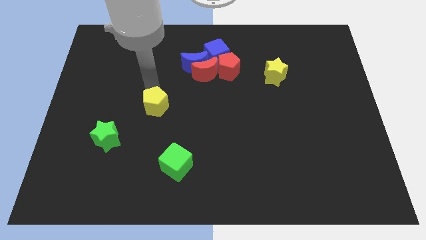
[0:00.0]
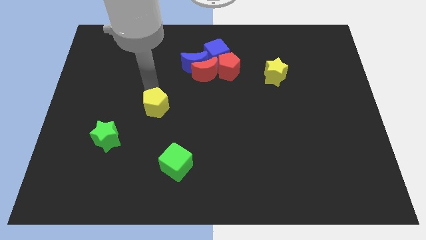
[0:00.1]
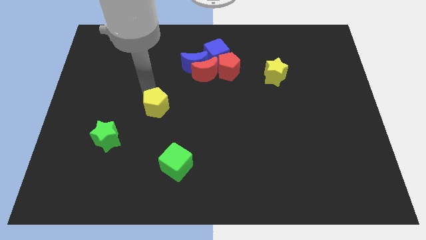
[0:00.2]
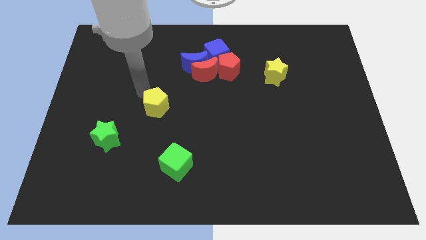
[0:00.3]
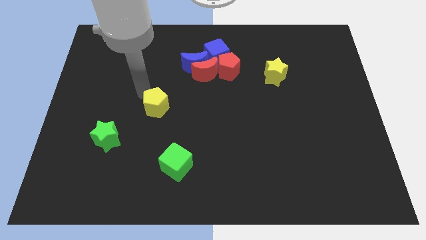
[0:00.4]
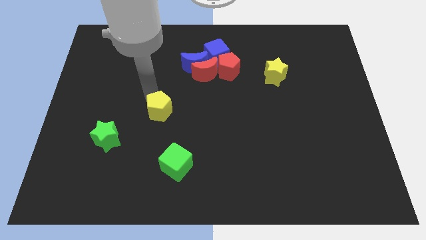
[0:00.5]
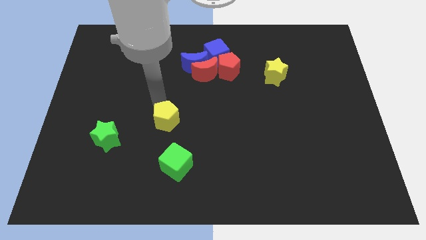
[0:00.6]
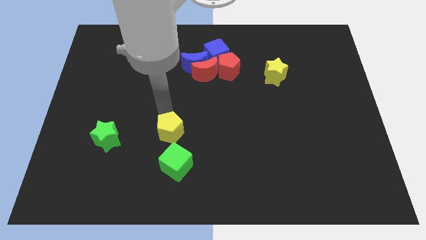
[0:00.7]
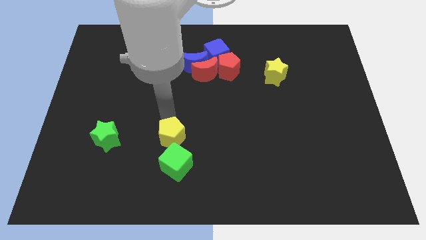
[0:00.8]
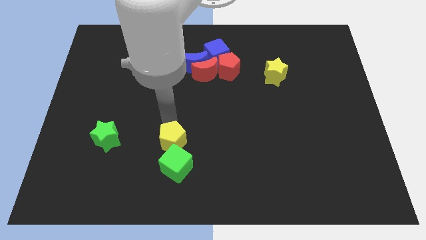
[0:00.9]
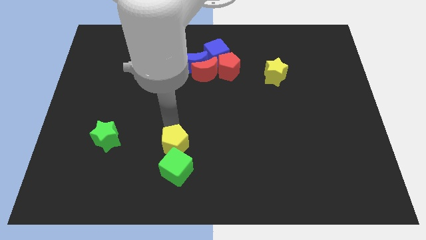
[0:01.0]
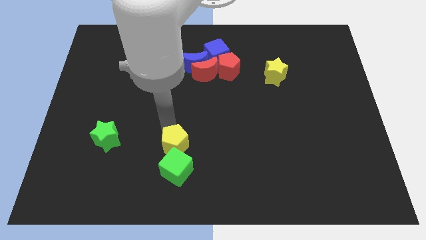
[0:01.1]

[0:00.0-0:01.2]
place the yellow pentagon right to the green star

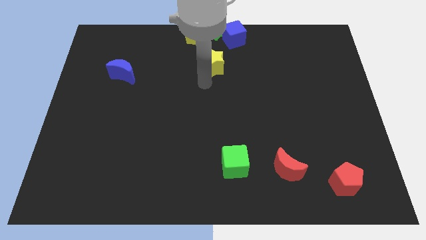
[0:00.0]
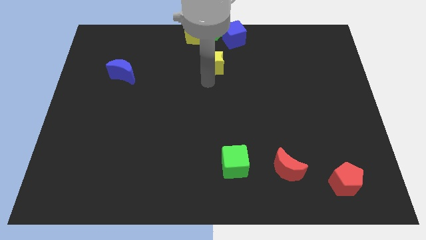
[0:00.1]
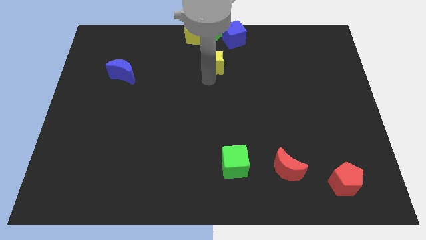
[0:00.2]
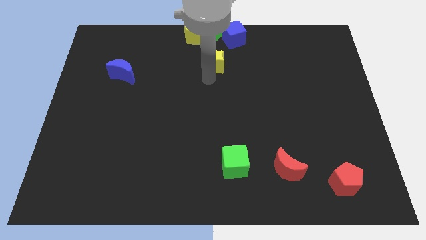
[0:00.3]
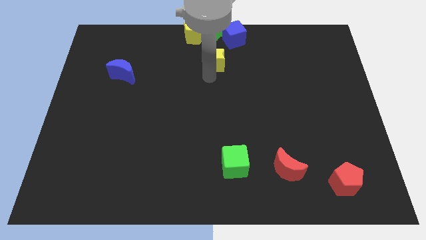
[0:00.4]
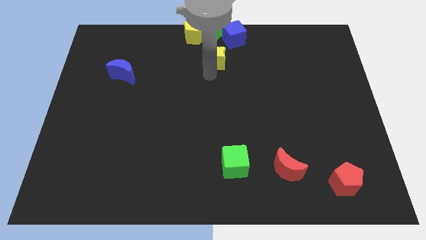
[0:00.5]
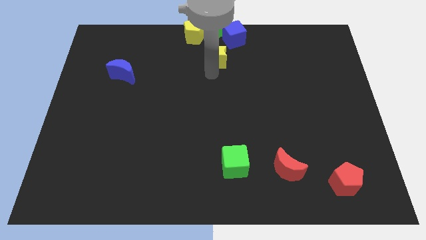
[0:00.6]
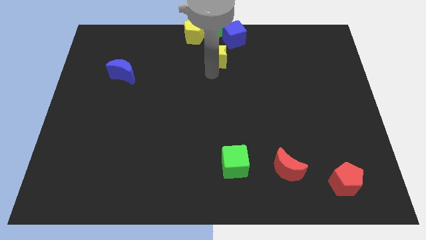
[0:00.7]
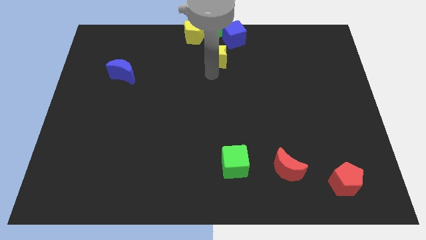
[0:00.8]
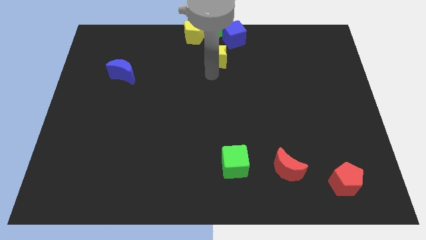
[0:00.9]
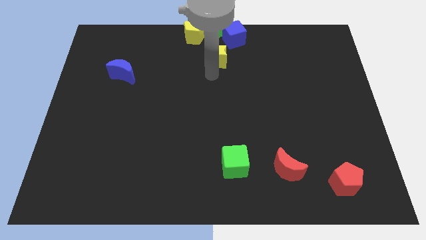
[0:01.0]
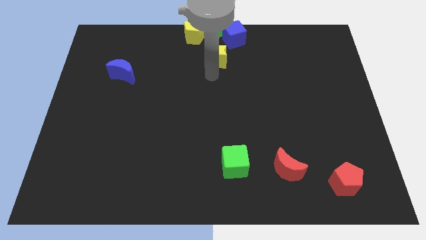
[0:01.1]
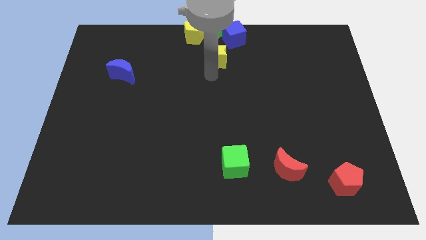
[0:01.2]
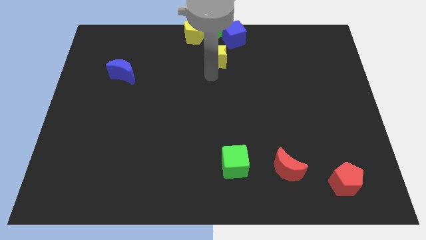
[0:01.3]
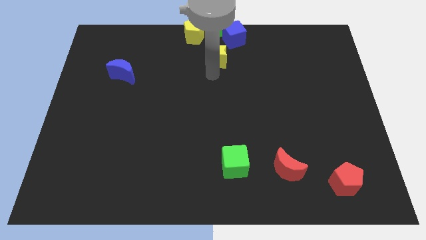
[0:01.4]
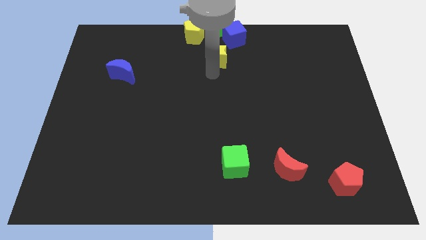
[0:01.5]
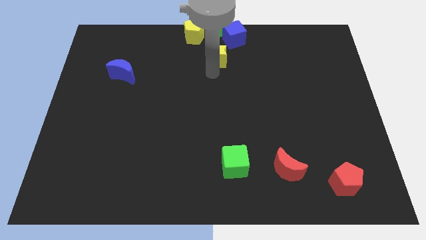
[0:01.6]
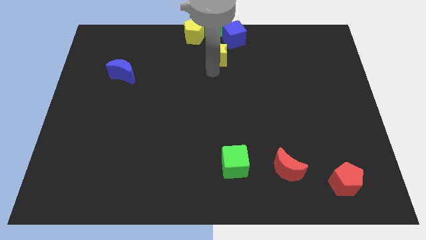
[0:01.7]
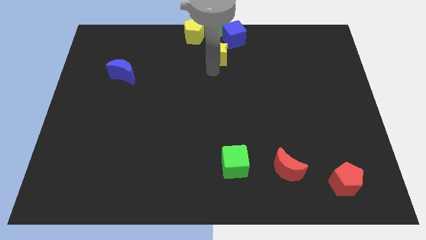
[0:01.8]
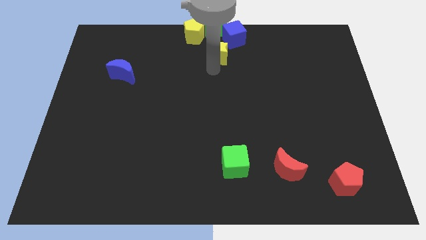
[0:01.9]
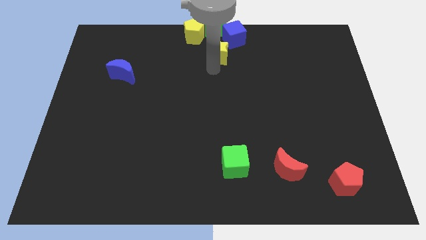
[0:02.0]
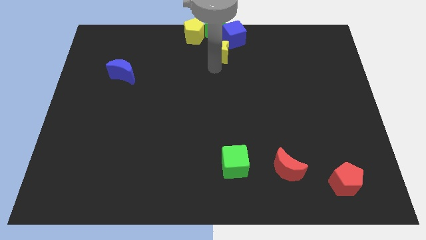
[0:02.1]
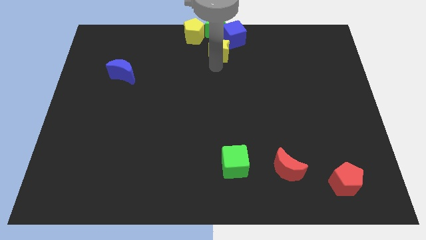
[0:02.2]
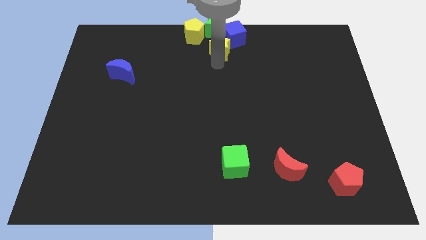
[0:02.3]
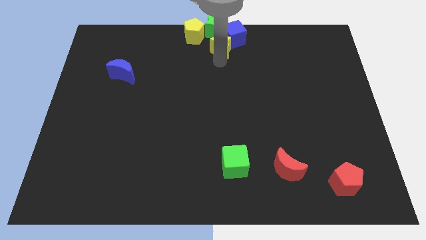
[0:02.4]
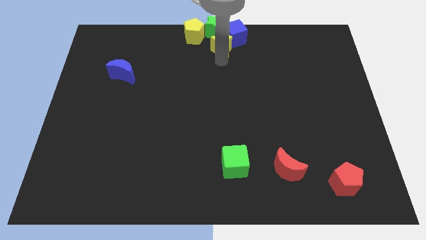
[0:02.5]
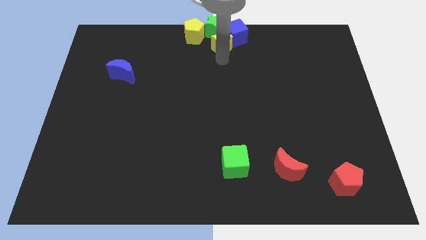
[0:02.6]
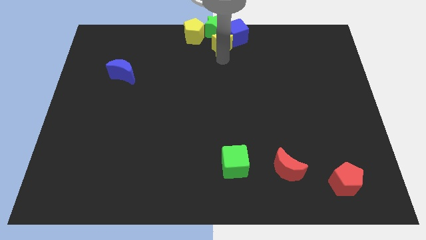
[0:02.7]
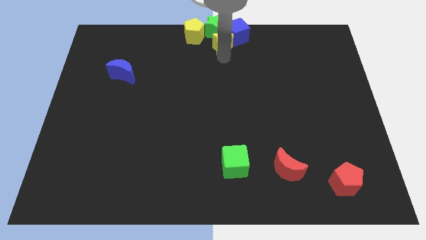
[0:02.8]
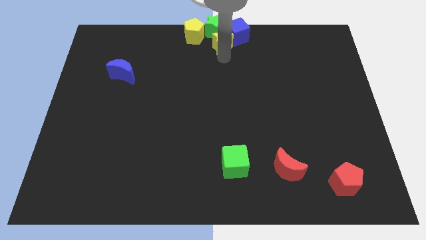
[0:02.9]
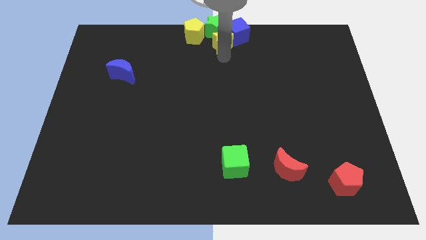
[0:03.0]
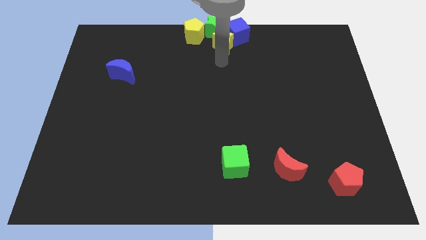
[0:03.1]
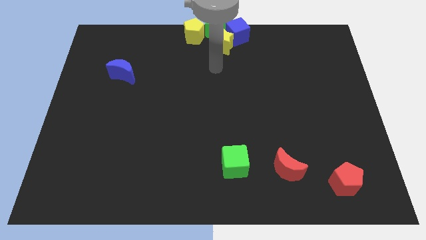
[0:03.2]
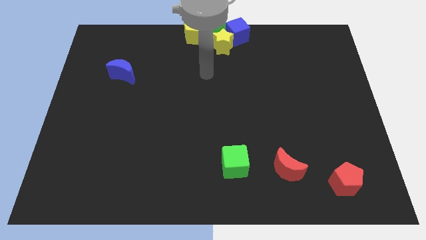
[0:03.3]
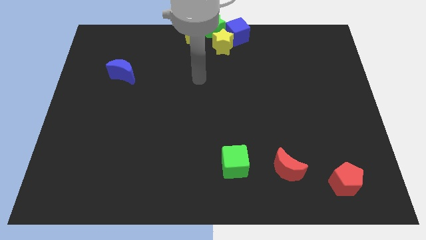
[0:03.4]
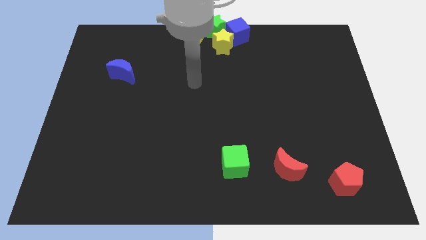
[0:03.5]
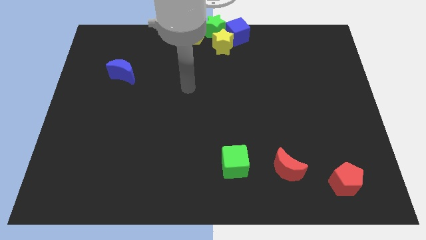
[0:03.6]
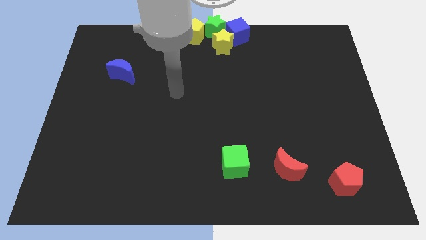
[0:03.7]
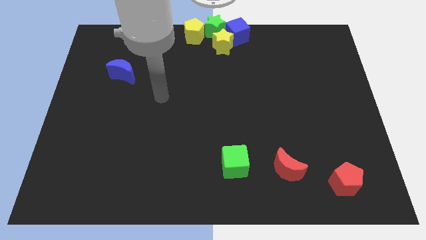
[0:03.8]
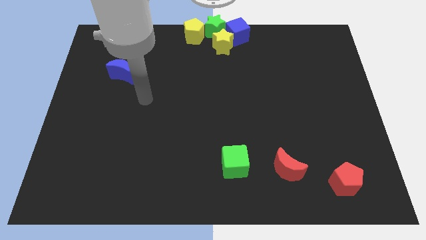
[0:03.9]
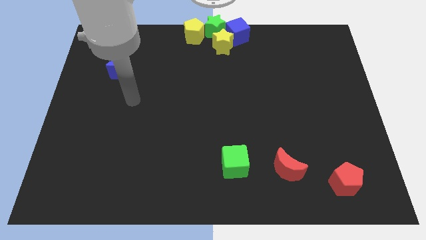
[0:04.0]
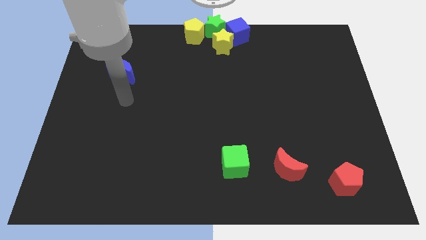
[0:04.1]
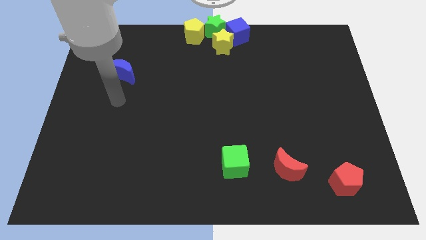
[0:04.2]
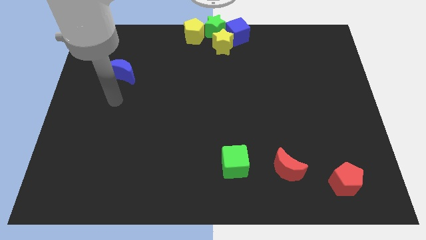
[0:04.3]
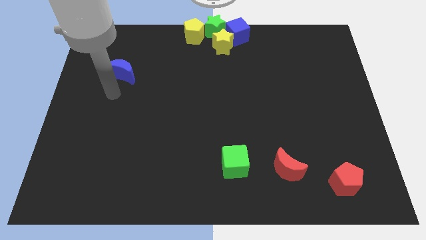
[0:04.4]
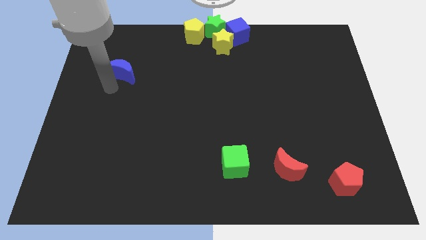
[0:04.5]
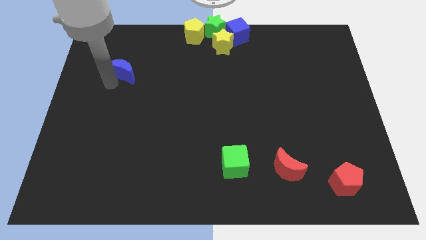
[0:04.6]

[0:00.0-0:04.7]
move the yellow star below to the green star

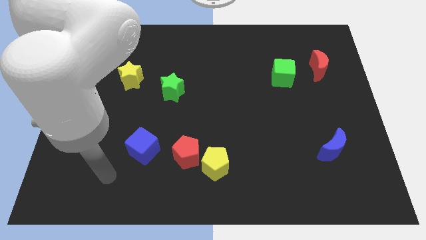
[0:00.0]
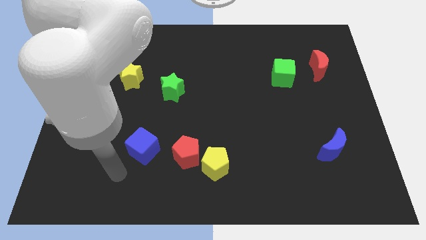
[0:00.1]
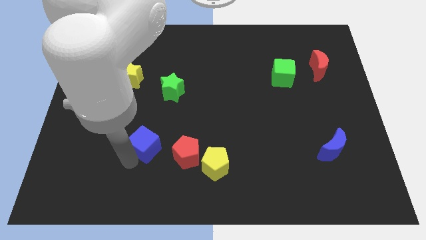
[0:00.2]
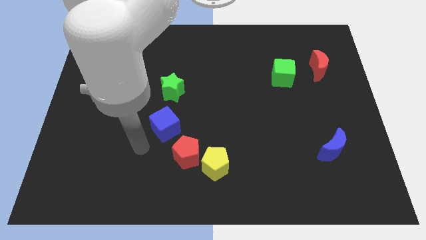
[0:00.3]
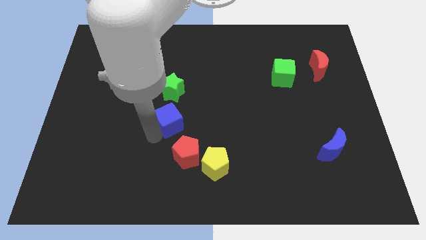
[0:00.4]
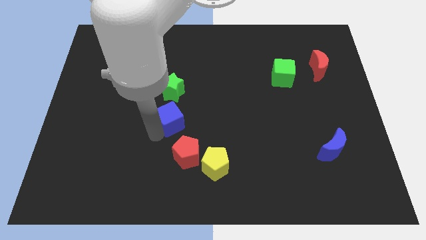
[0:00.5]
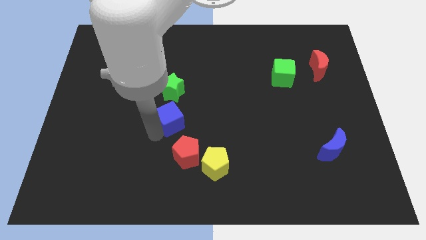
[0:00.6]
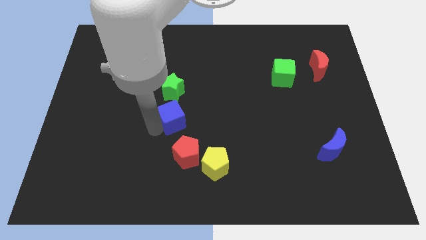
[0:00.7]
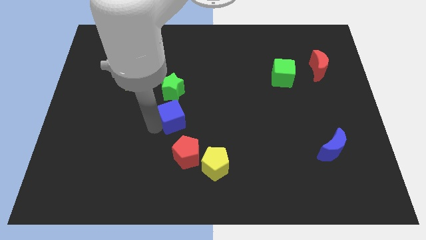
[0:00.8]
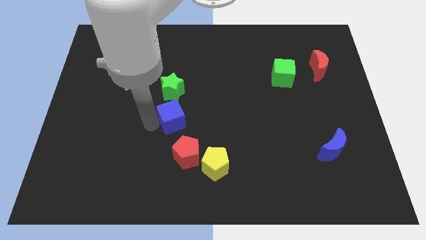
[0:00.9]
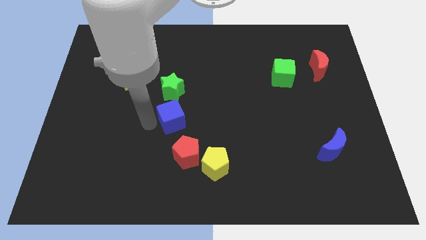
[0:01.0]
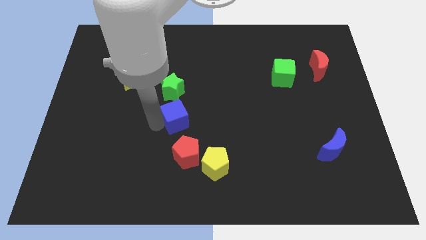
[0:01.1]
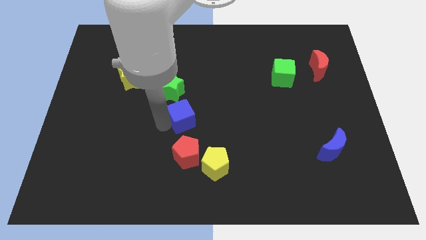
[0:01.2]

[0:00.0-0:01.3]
push the blue cube diagonally in between red pentagon and green star

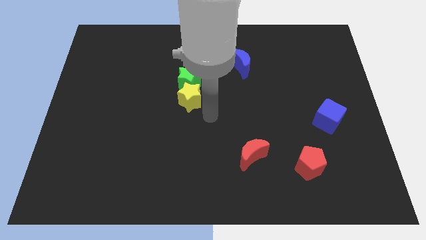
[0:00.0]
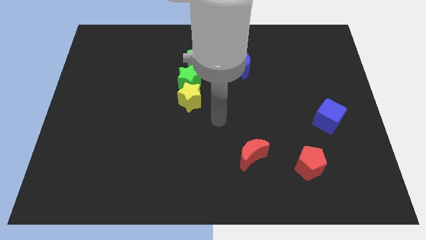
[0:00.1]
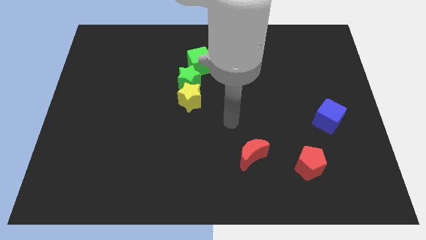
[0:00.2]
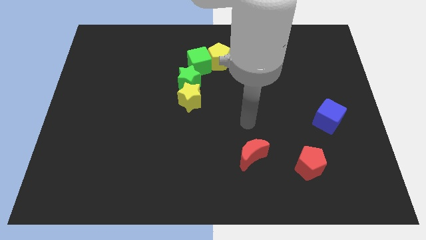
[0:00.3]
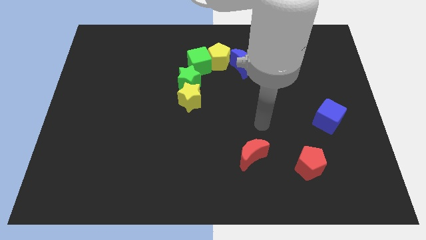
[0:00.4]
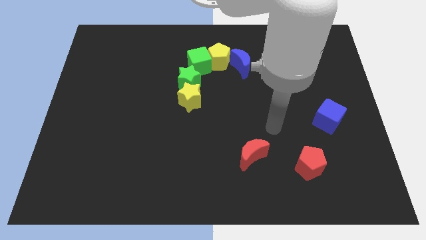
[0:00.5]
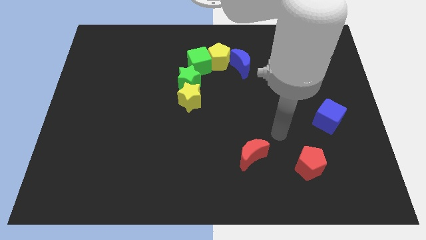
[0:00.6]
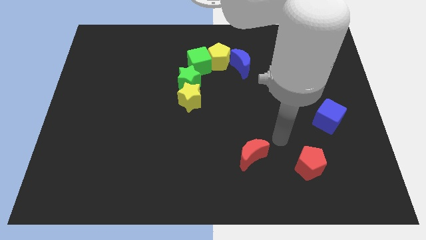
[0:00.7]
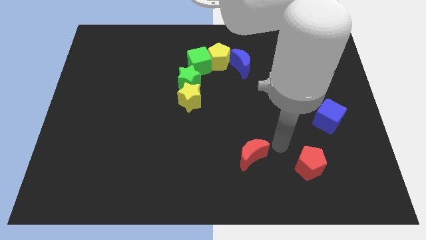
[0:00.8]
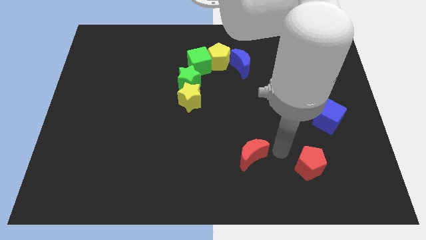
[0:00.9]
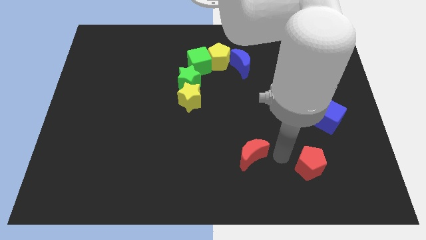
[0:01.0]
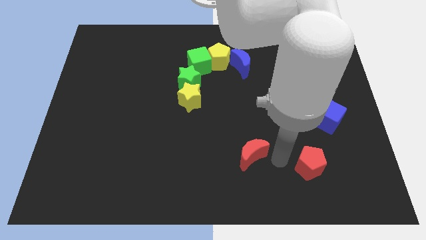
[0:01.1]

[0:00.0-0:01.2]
move your arm to the left of the red pentagon

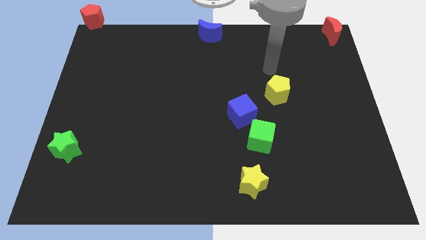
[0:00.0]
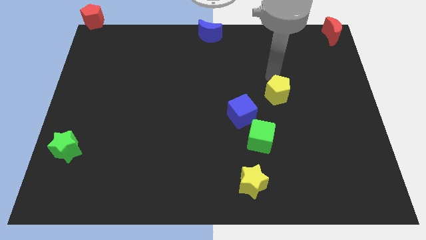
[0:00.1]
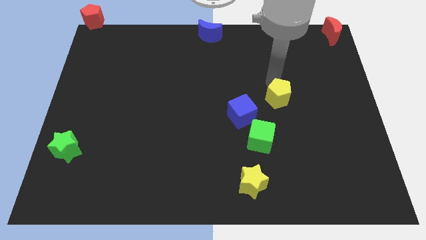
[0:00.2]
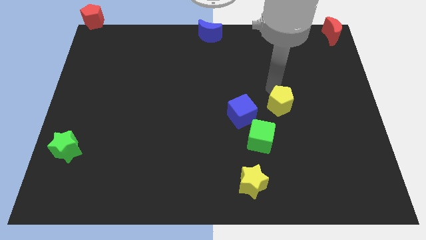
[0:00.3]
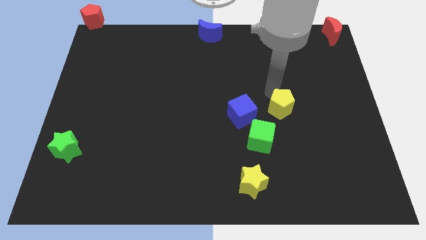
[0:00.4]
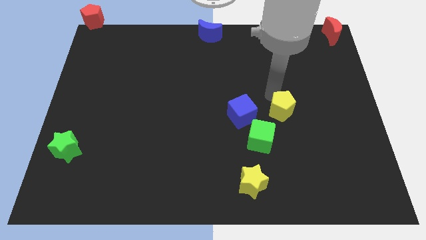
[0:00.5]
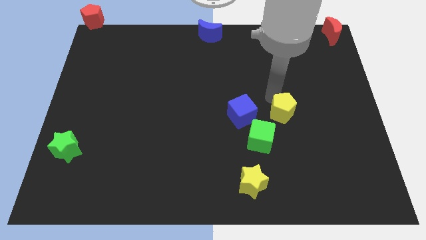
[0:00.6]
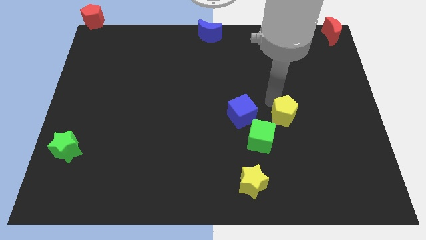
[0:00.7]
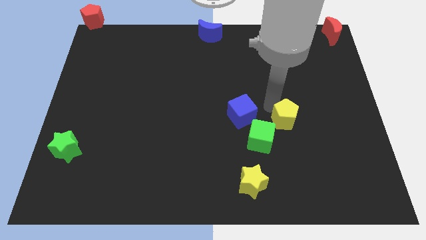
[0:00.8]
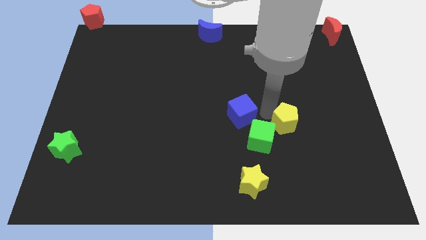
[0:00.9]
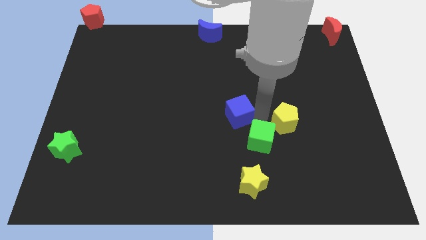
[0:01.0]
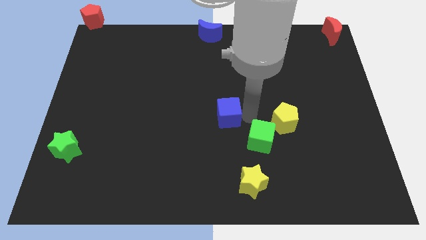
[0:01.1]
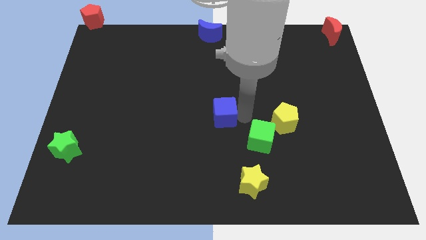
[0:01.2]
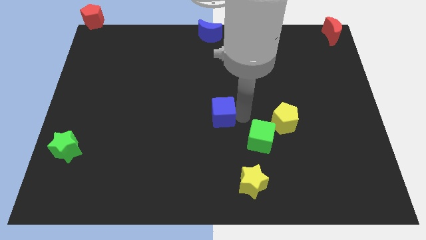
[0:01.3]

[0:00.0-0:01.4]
move blue cube and the yellow pentagon parallel to each other
